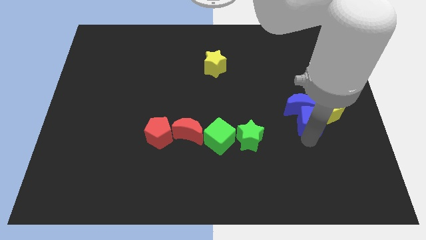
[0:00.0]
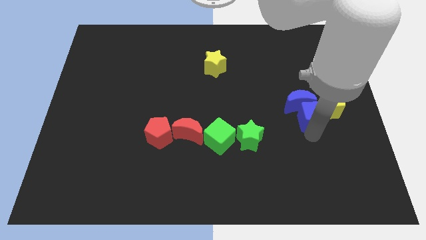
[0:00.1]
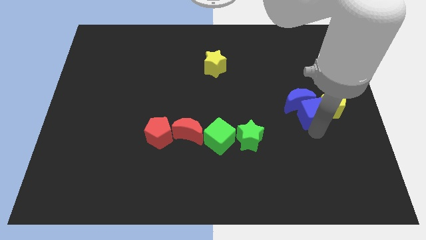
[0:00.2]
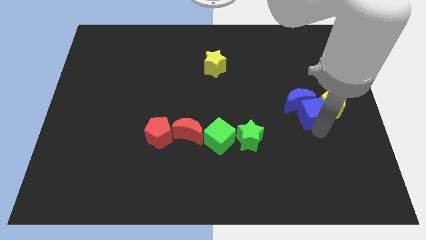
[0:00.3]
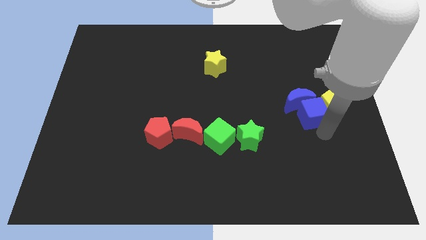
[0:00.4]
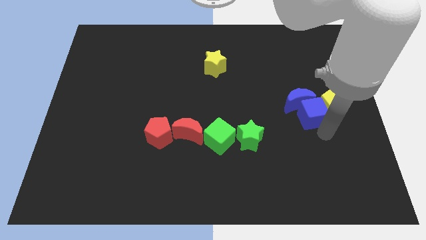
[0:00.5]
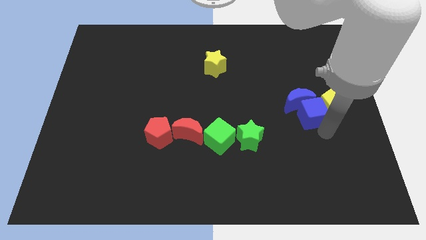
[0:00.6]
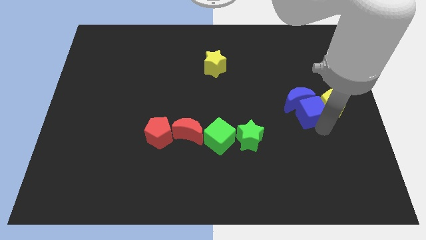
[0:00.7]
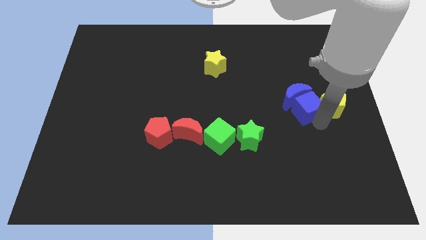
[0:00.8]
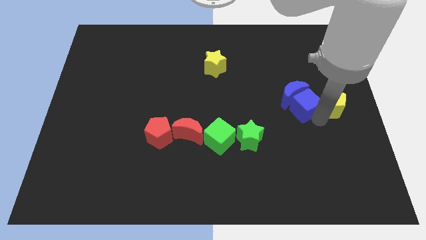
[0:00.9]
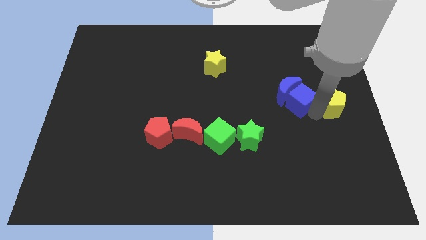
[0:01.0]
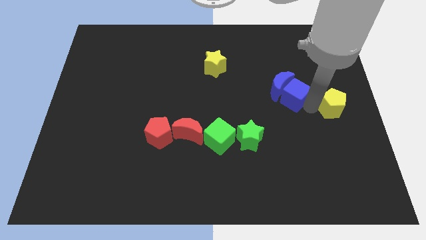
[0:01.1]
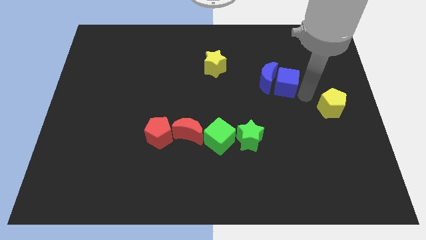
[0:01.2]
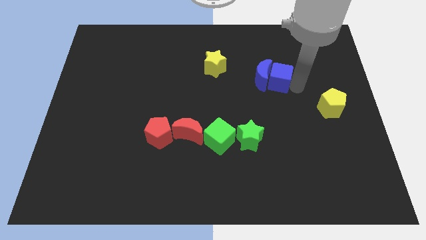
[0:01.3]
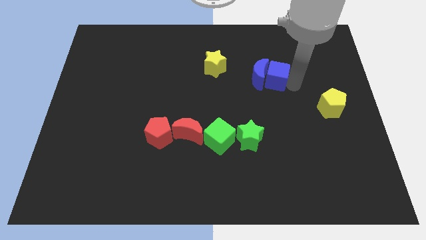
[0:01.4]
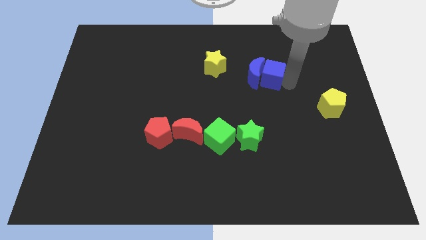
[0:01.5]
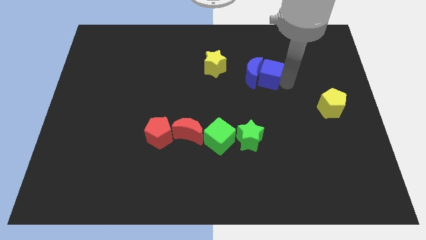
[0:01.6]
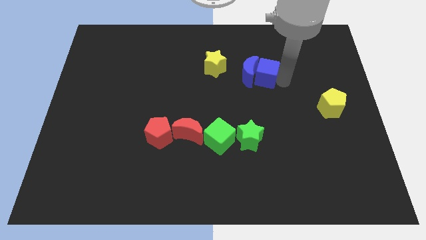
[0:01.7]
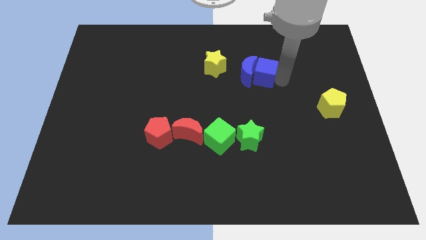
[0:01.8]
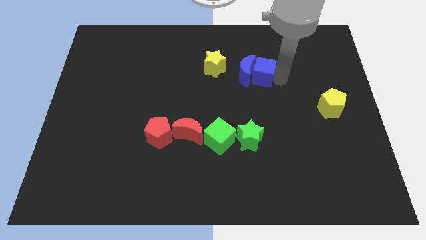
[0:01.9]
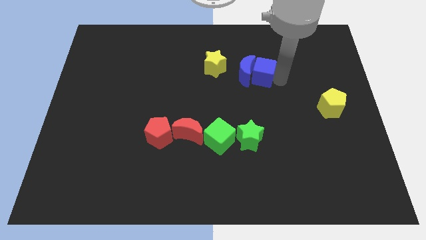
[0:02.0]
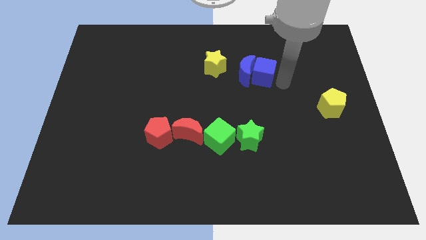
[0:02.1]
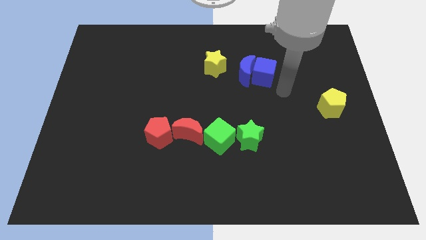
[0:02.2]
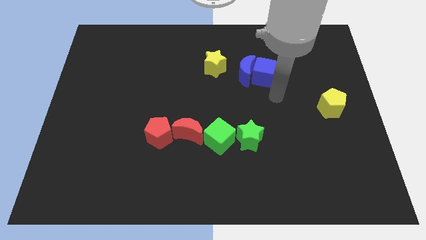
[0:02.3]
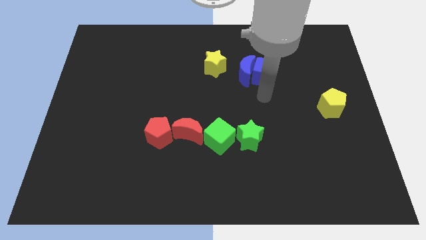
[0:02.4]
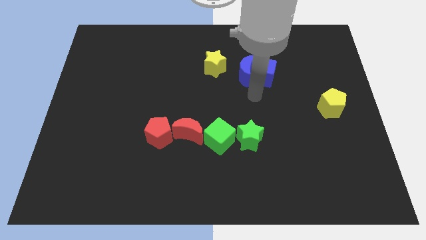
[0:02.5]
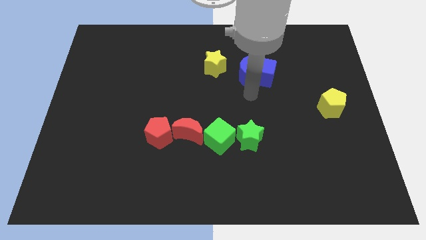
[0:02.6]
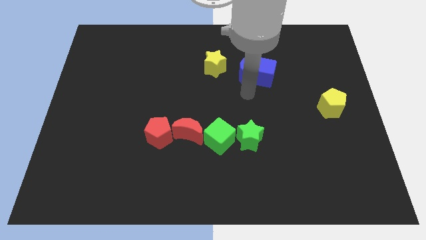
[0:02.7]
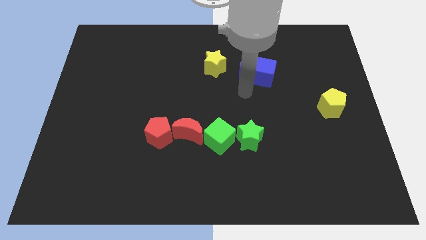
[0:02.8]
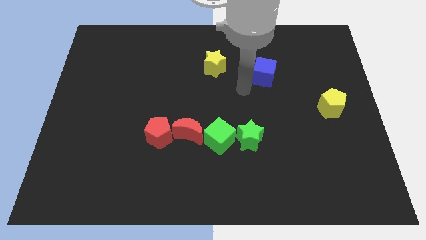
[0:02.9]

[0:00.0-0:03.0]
push the blue cube and blue crescent to the right side of the yellow star

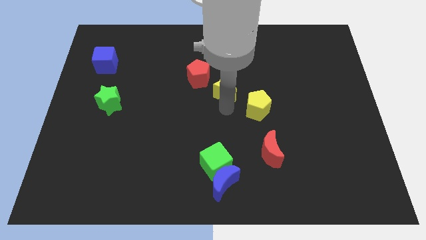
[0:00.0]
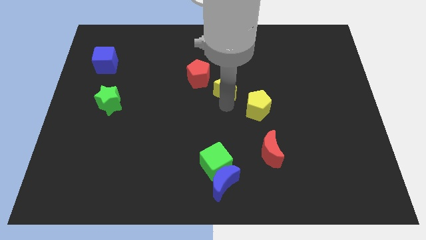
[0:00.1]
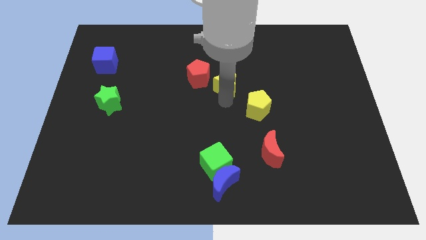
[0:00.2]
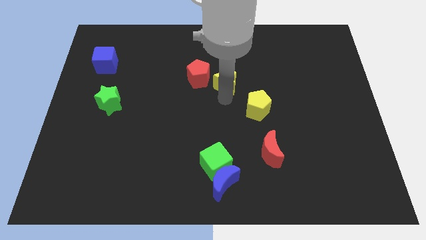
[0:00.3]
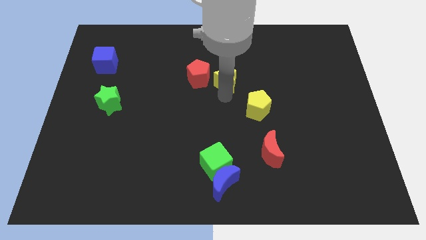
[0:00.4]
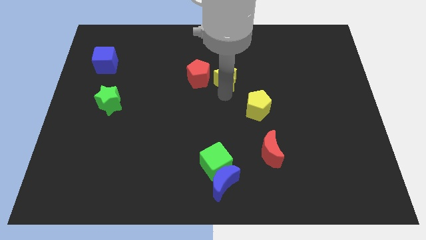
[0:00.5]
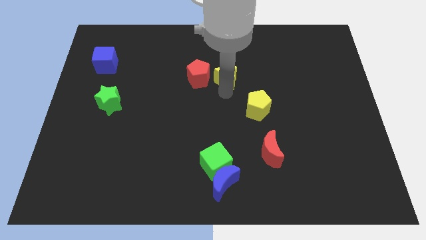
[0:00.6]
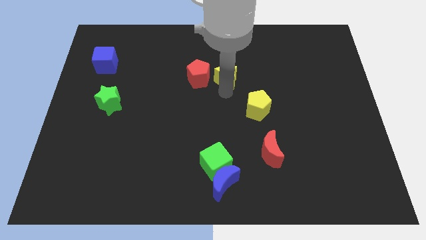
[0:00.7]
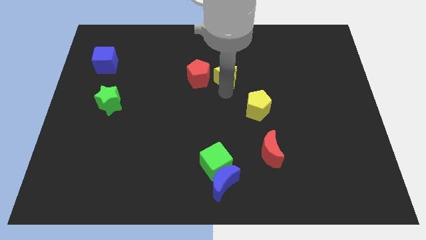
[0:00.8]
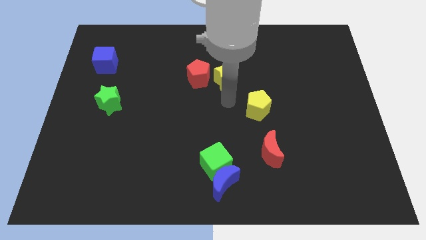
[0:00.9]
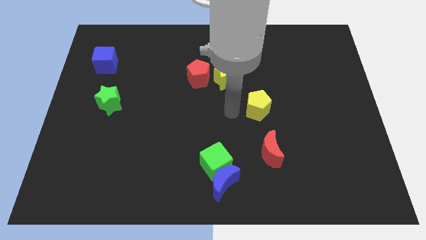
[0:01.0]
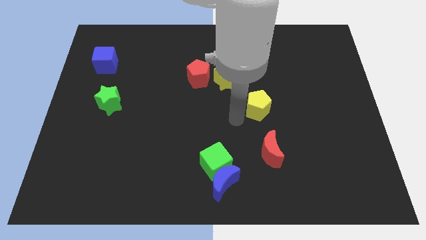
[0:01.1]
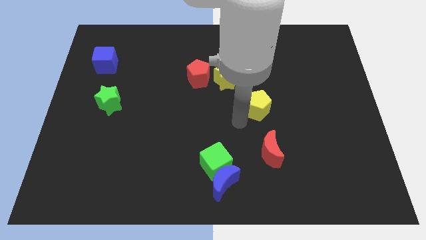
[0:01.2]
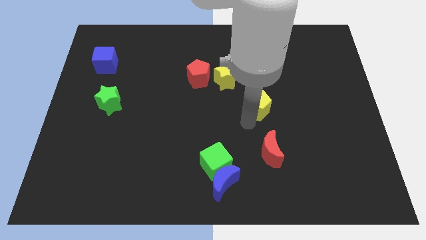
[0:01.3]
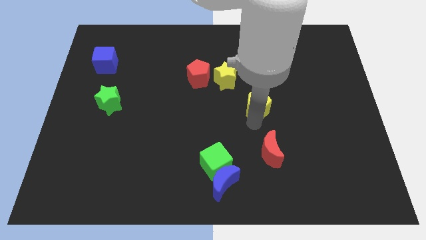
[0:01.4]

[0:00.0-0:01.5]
move your arm away from the yellow star

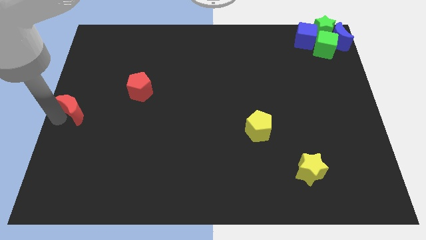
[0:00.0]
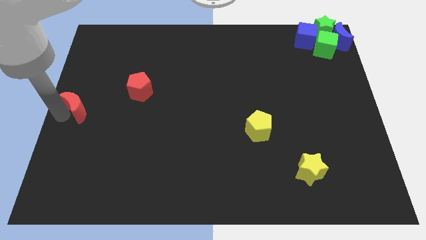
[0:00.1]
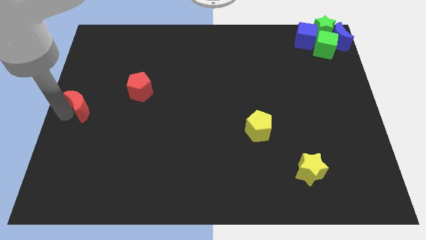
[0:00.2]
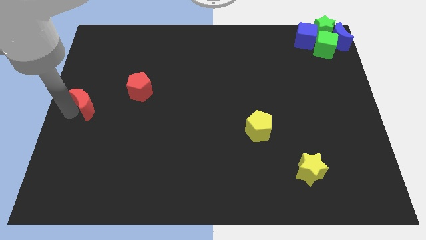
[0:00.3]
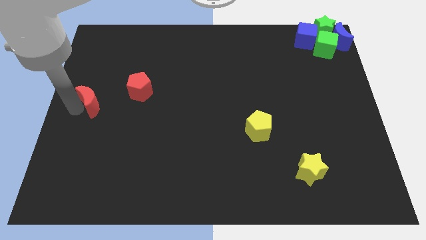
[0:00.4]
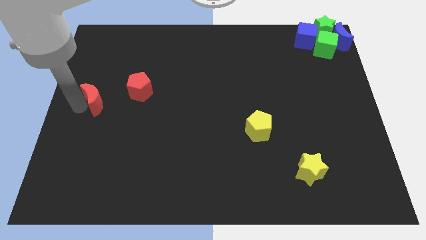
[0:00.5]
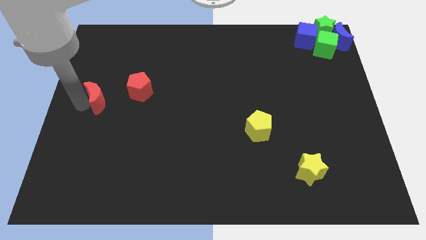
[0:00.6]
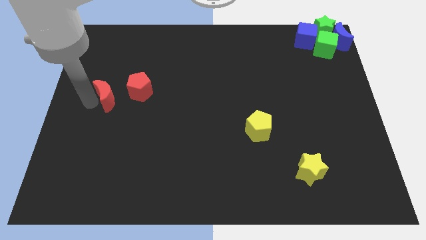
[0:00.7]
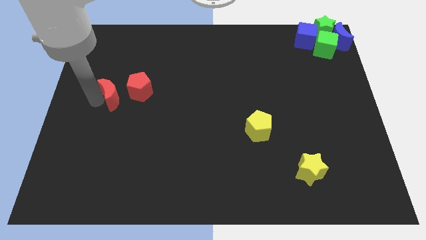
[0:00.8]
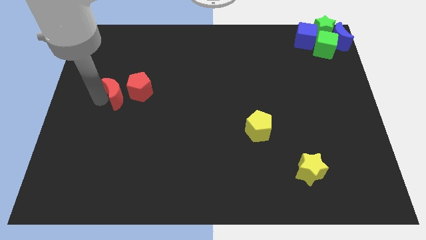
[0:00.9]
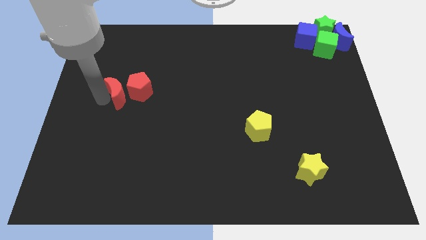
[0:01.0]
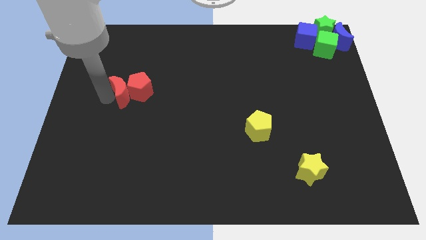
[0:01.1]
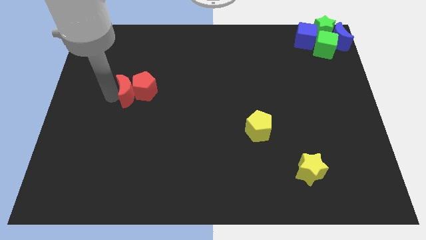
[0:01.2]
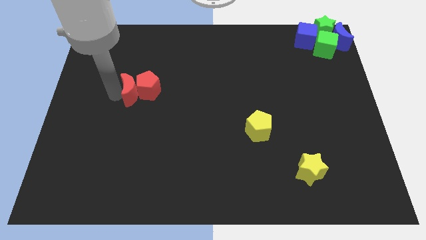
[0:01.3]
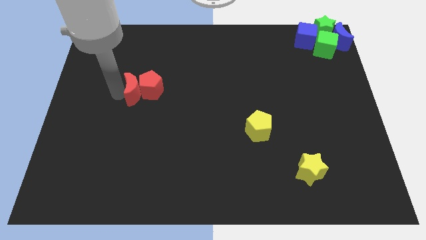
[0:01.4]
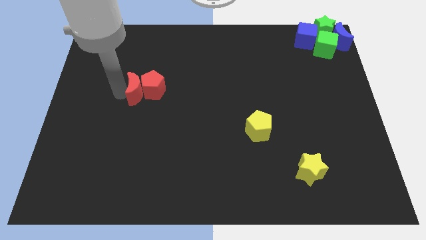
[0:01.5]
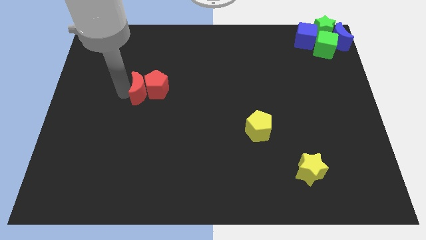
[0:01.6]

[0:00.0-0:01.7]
push the red moon into the red pentagon

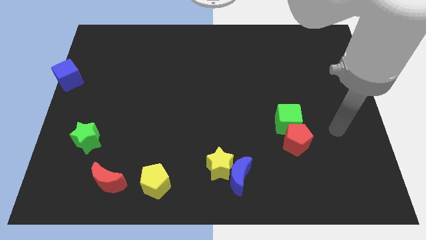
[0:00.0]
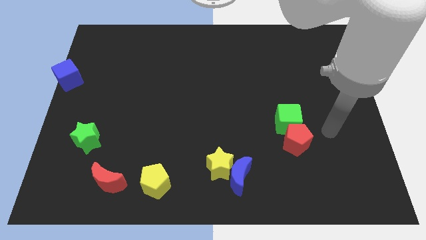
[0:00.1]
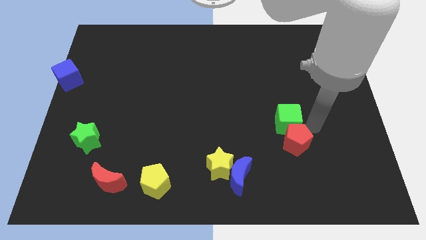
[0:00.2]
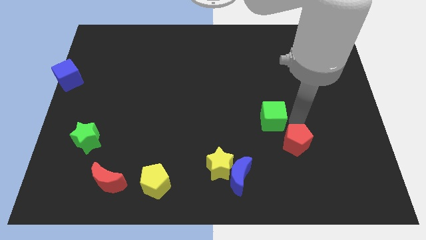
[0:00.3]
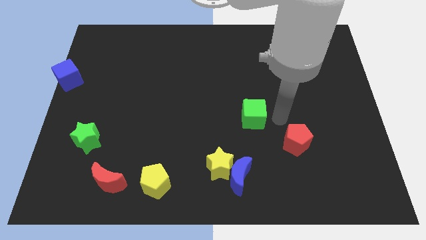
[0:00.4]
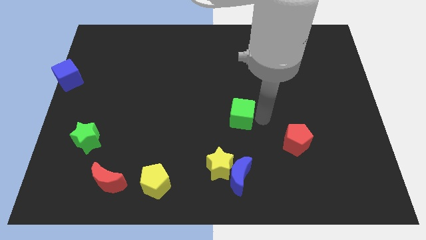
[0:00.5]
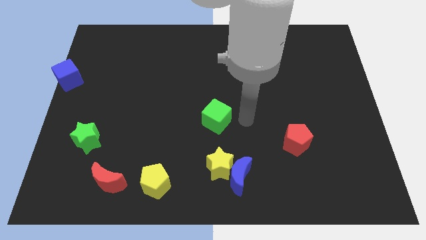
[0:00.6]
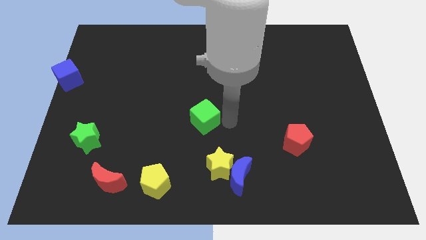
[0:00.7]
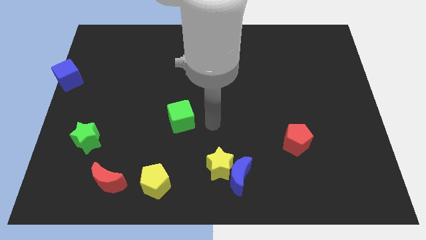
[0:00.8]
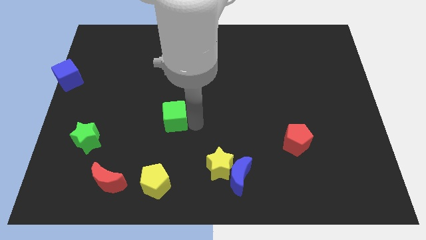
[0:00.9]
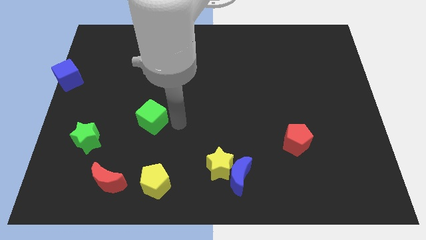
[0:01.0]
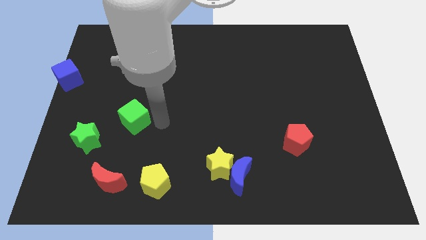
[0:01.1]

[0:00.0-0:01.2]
put the green cube above the yellow pentagon

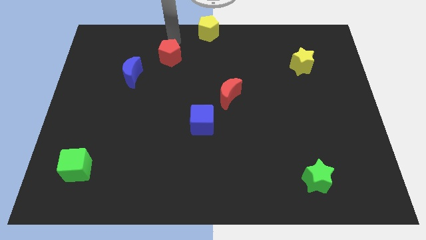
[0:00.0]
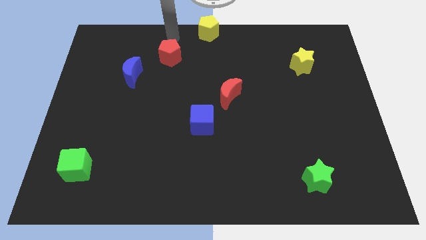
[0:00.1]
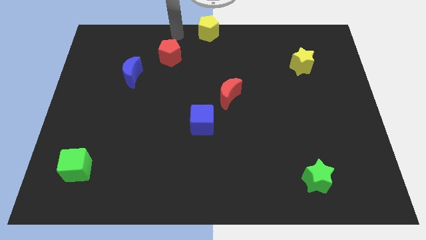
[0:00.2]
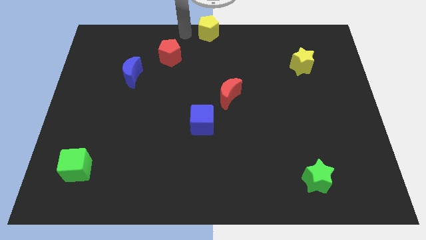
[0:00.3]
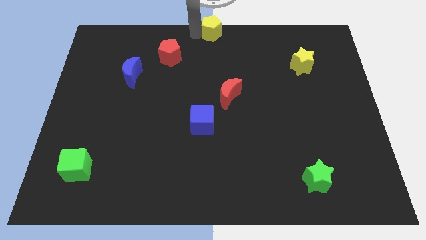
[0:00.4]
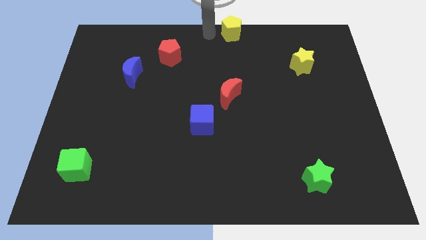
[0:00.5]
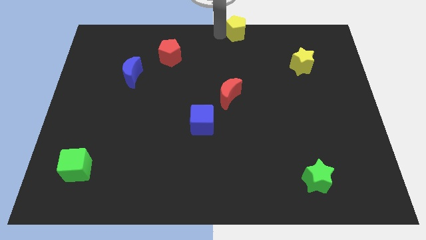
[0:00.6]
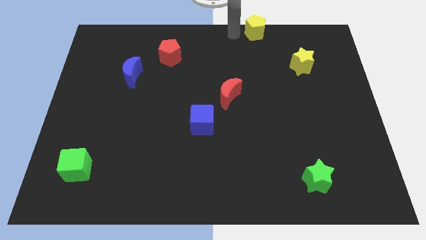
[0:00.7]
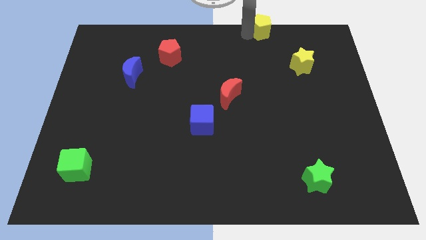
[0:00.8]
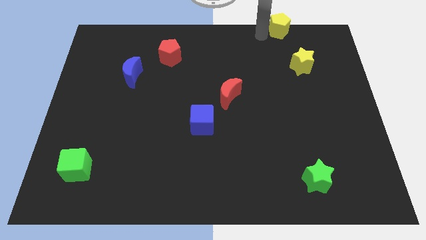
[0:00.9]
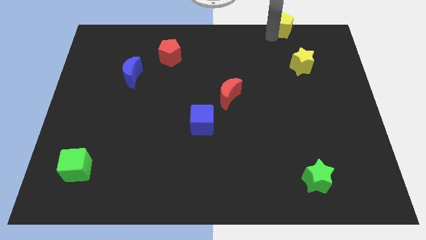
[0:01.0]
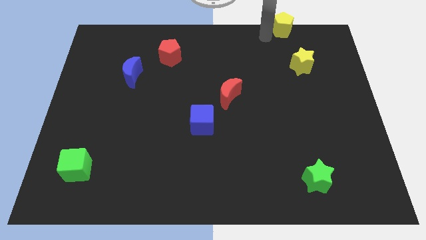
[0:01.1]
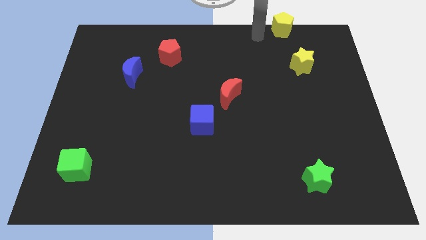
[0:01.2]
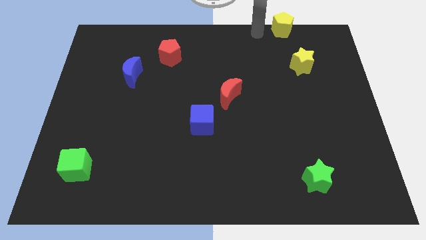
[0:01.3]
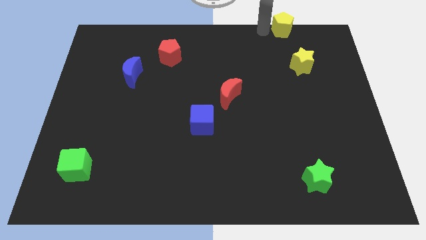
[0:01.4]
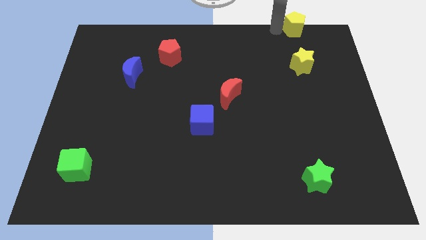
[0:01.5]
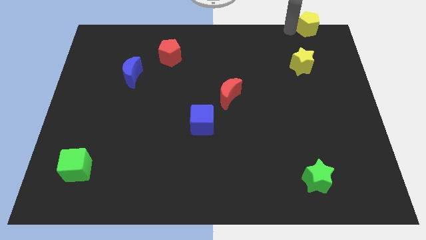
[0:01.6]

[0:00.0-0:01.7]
place the yellow pentagon above the yellow star
